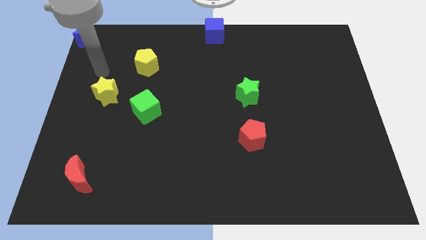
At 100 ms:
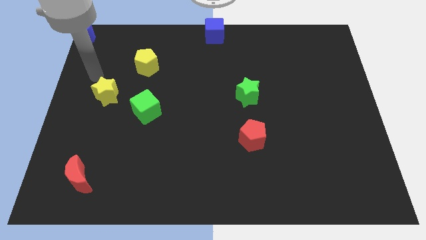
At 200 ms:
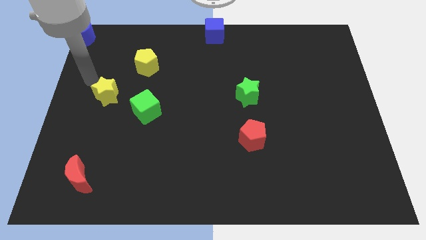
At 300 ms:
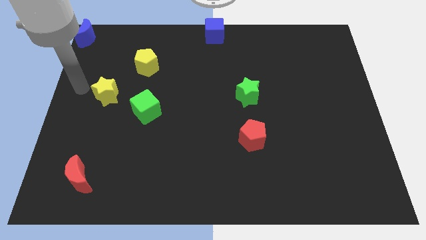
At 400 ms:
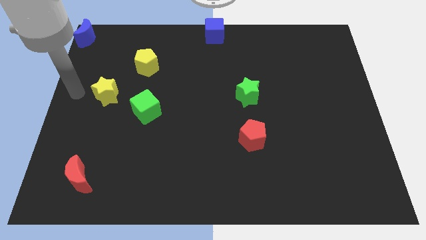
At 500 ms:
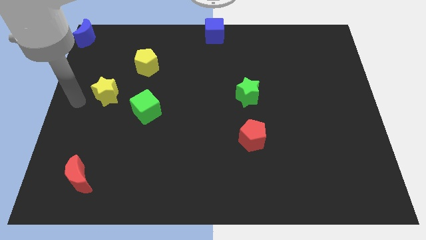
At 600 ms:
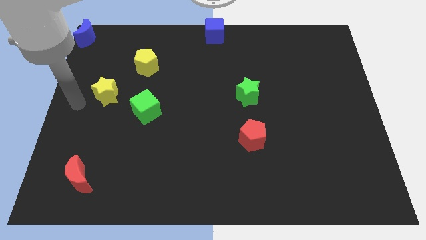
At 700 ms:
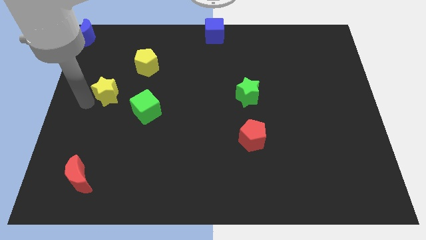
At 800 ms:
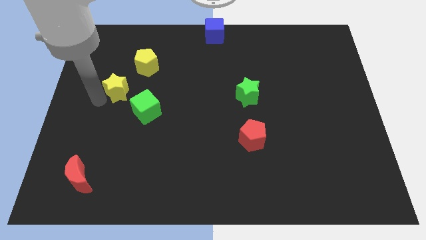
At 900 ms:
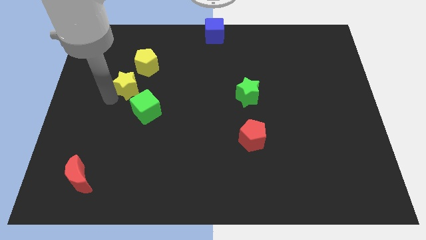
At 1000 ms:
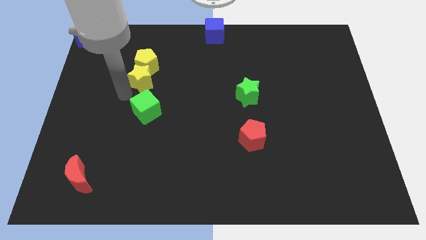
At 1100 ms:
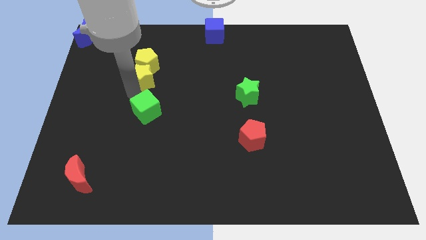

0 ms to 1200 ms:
place the yellow star at the bottom of yellow pentagon

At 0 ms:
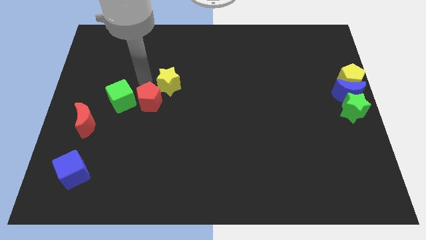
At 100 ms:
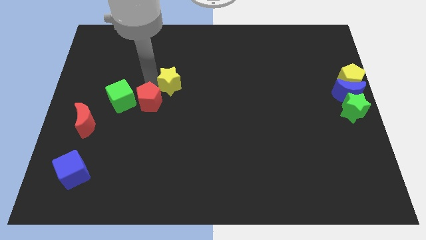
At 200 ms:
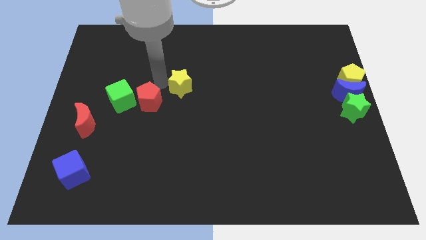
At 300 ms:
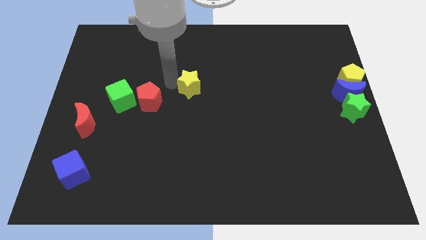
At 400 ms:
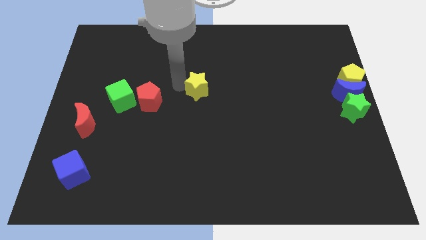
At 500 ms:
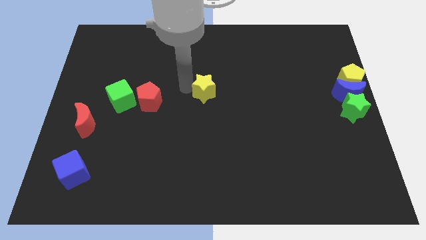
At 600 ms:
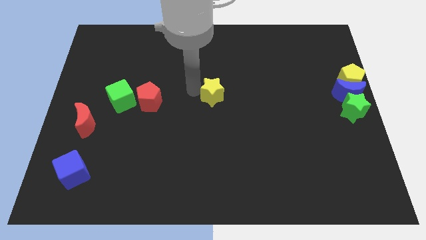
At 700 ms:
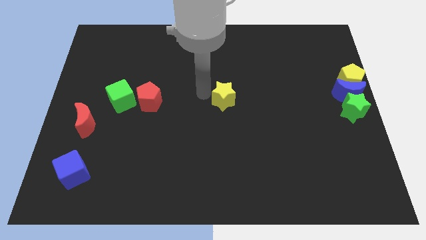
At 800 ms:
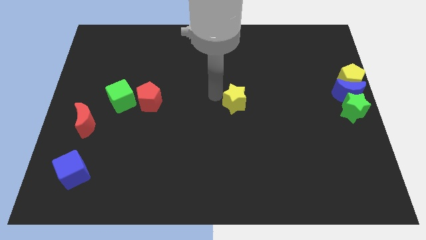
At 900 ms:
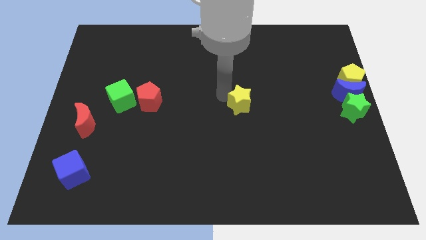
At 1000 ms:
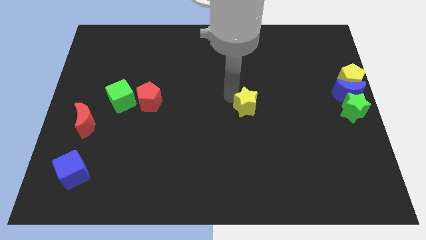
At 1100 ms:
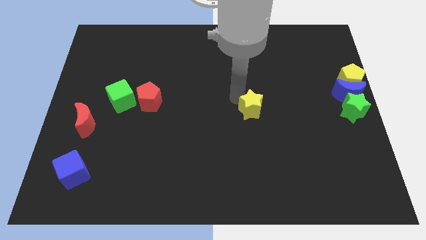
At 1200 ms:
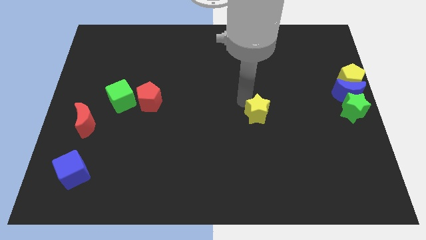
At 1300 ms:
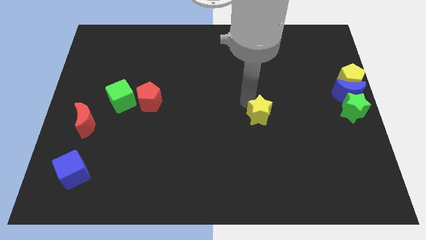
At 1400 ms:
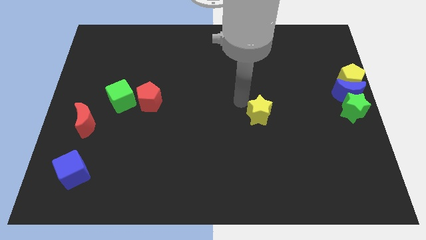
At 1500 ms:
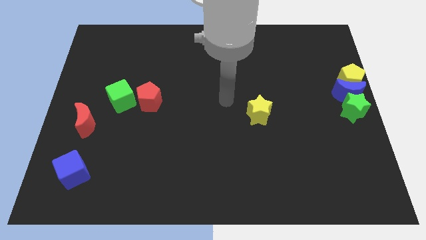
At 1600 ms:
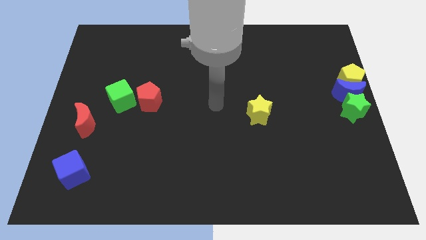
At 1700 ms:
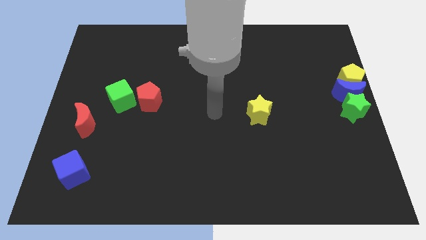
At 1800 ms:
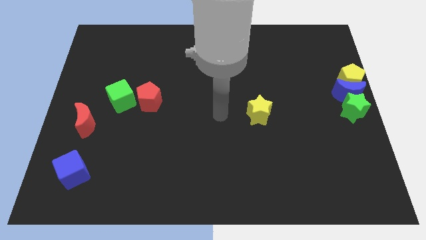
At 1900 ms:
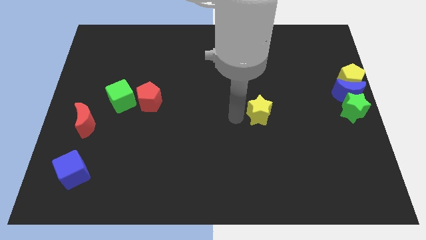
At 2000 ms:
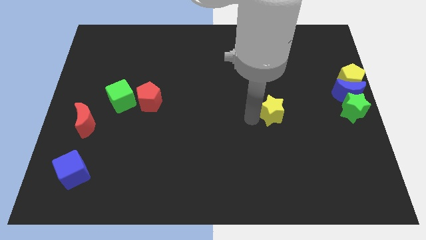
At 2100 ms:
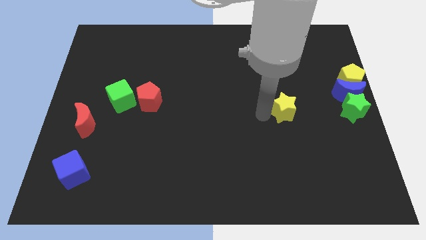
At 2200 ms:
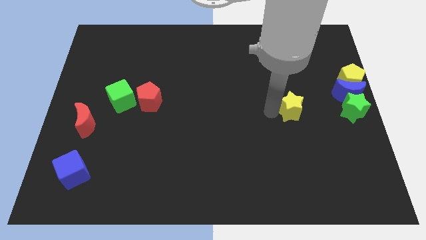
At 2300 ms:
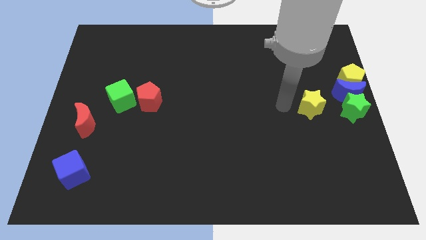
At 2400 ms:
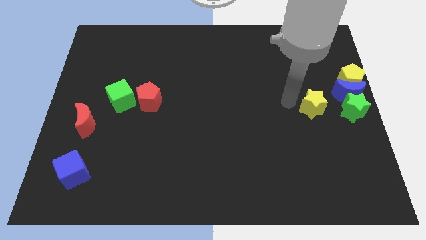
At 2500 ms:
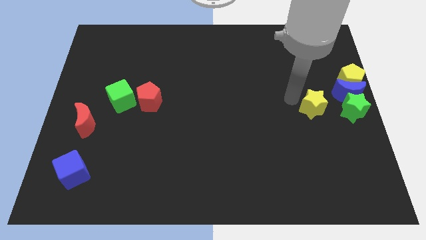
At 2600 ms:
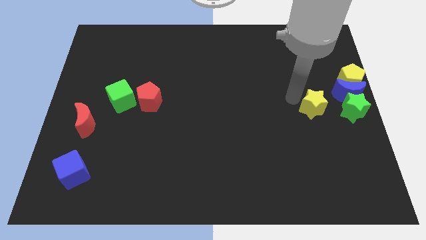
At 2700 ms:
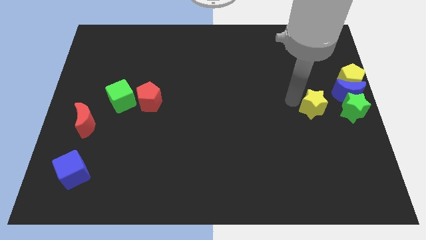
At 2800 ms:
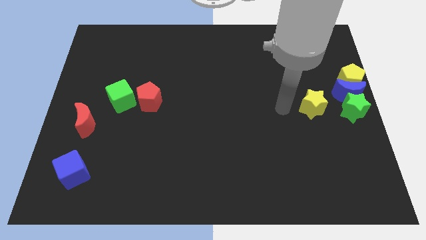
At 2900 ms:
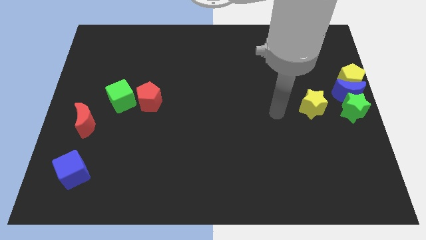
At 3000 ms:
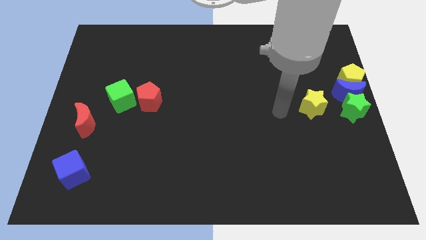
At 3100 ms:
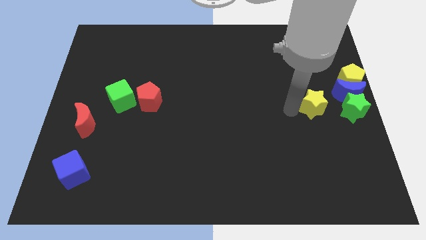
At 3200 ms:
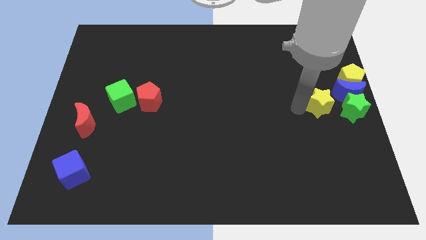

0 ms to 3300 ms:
place yellow star to the left of green star

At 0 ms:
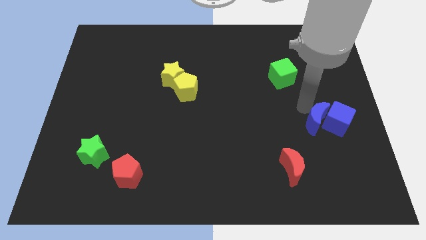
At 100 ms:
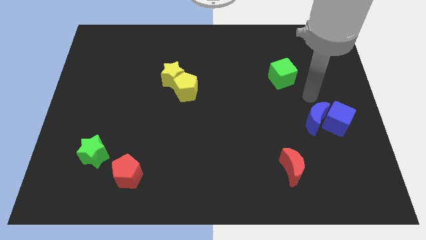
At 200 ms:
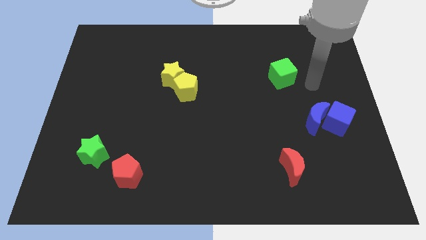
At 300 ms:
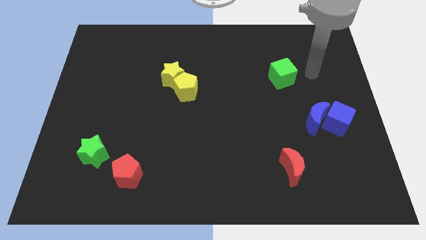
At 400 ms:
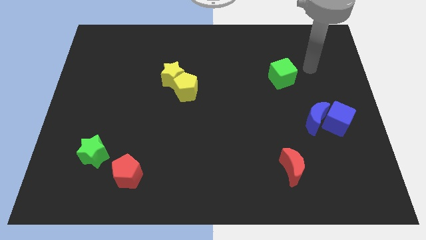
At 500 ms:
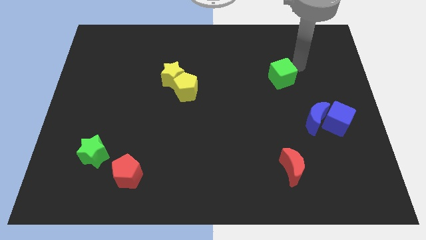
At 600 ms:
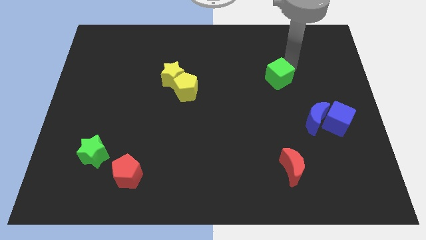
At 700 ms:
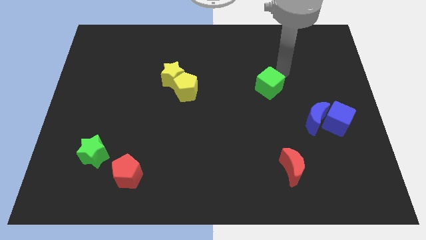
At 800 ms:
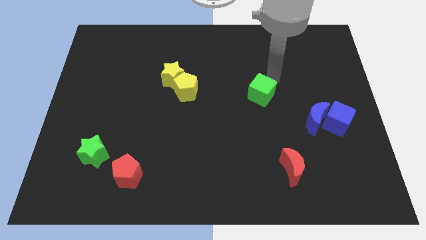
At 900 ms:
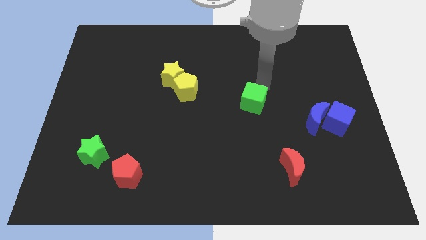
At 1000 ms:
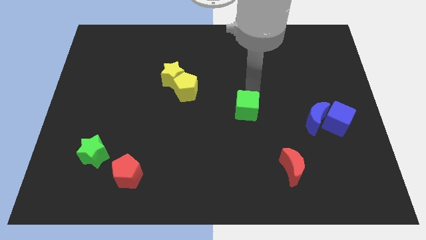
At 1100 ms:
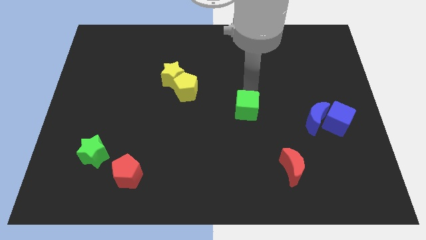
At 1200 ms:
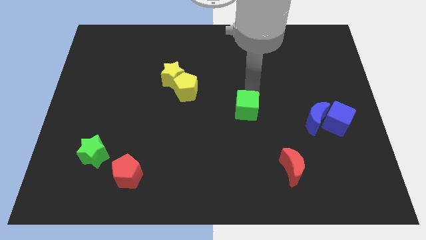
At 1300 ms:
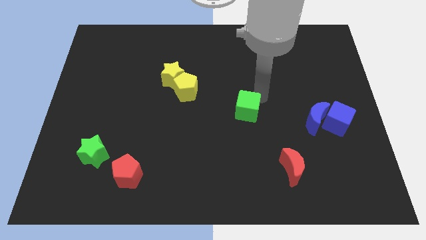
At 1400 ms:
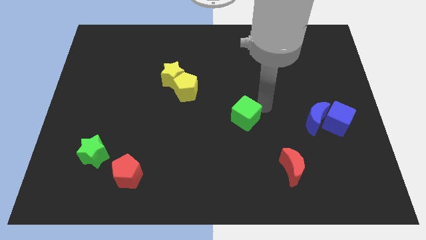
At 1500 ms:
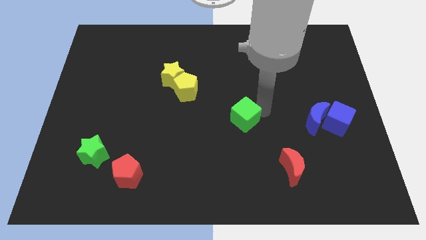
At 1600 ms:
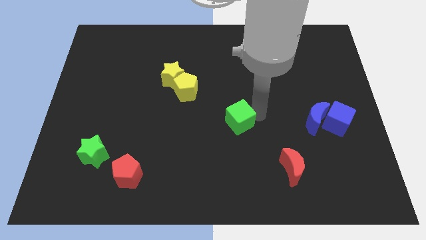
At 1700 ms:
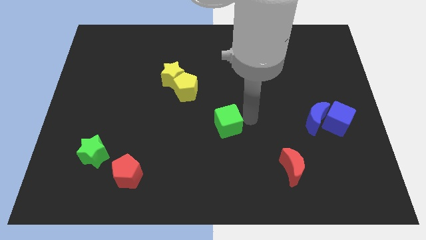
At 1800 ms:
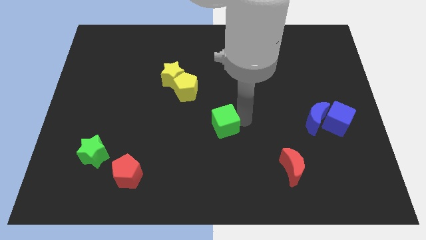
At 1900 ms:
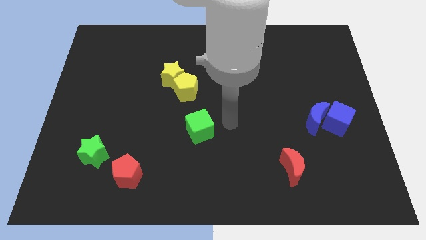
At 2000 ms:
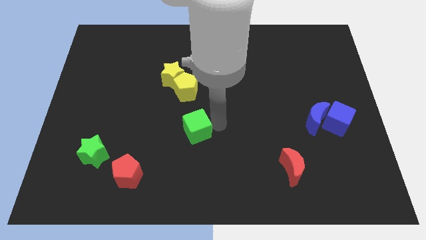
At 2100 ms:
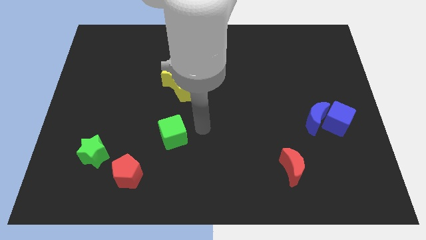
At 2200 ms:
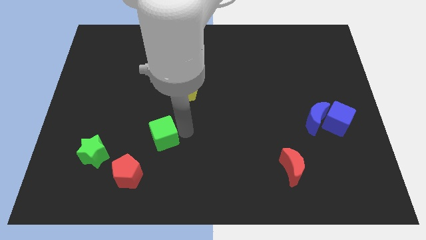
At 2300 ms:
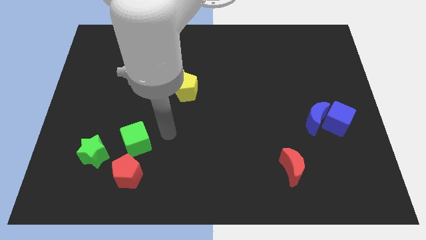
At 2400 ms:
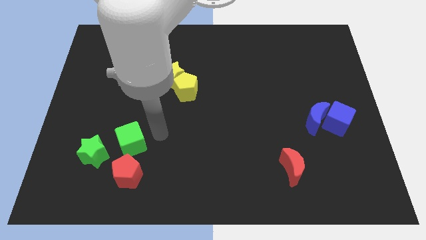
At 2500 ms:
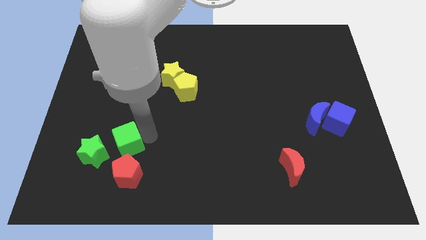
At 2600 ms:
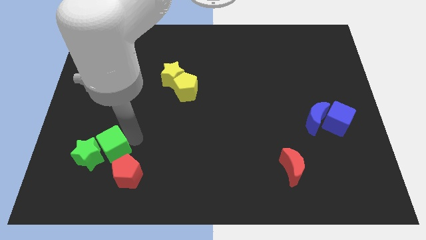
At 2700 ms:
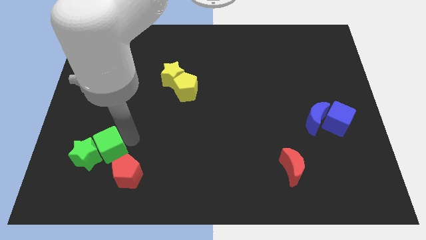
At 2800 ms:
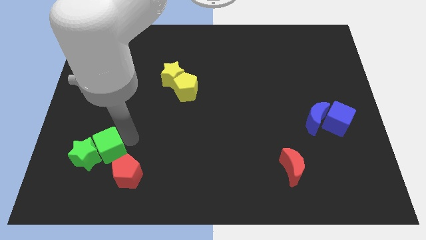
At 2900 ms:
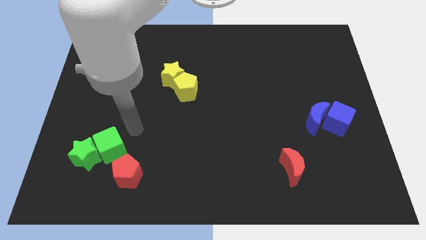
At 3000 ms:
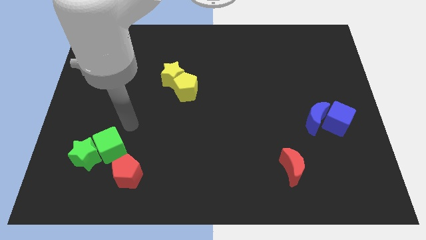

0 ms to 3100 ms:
move the green cube to the right side of the green star

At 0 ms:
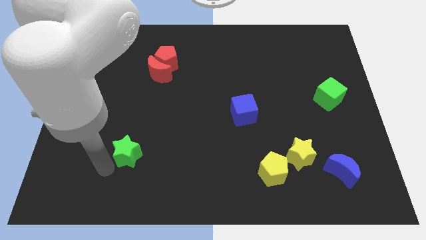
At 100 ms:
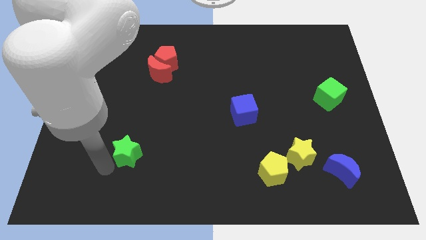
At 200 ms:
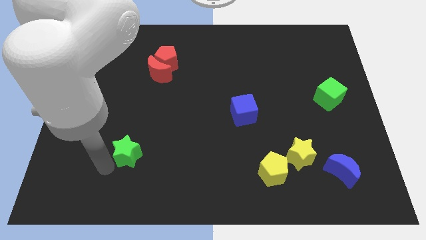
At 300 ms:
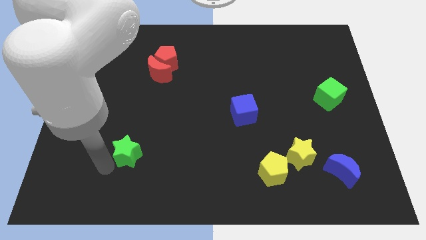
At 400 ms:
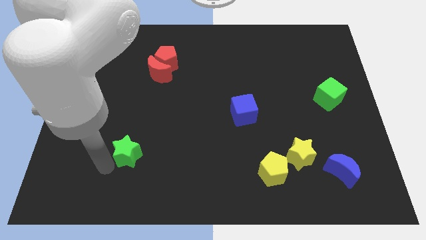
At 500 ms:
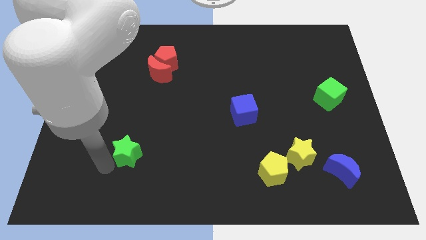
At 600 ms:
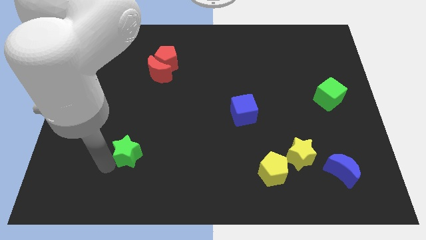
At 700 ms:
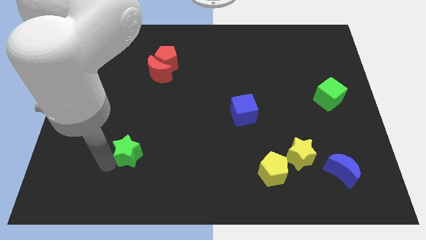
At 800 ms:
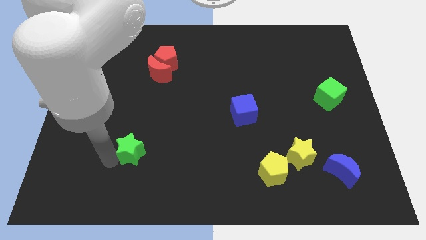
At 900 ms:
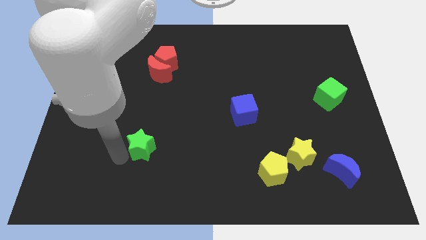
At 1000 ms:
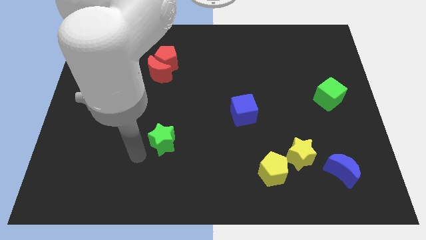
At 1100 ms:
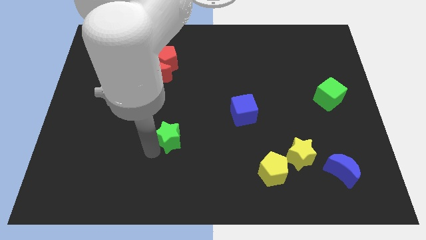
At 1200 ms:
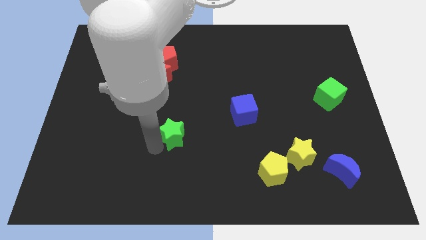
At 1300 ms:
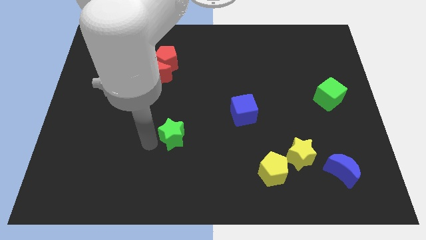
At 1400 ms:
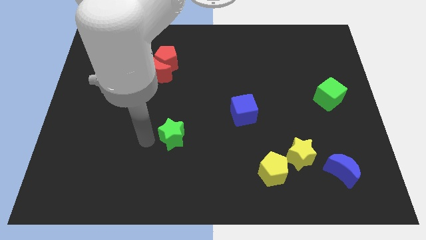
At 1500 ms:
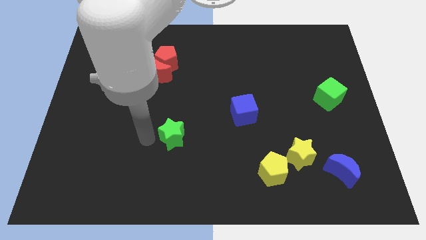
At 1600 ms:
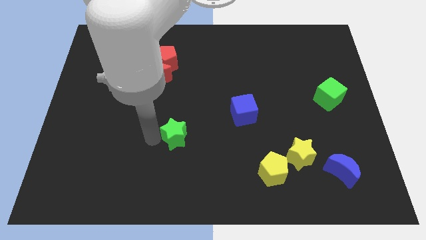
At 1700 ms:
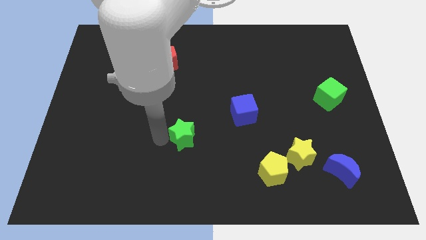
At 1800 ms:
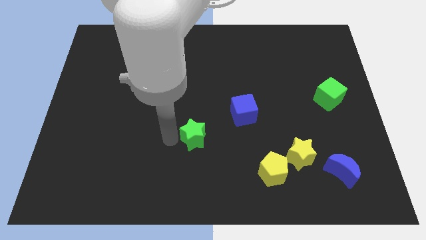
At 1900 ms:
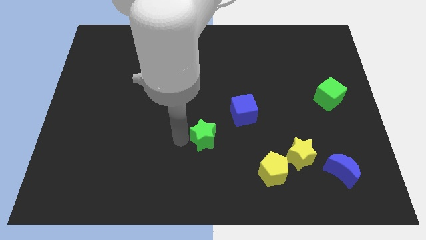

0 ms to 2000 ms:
slide the green star diagonally bottom right to the red blocks
